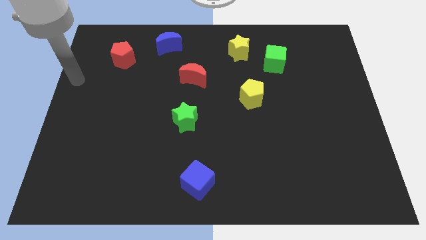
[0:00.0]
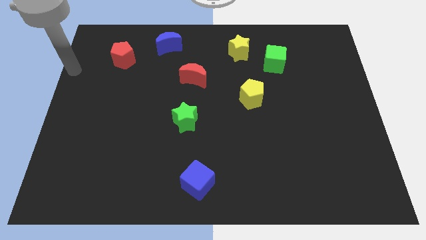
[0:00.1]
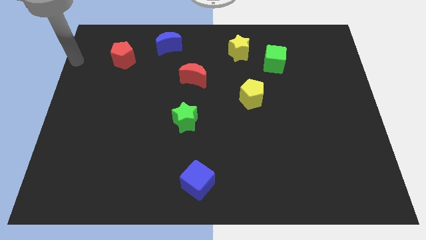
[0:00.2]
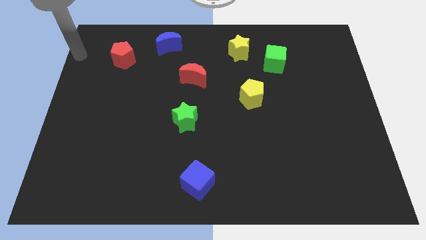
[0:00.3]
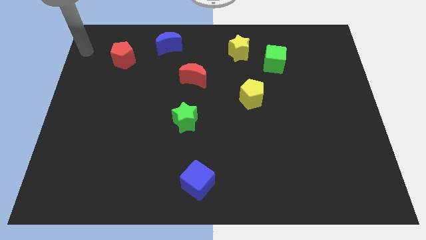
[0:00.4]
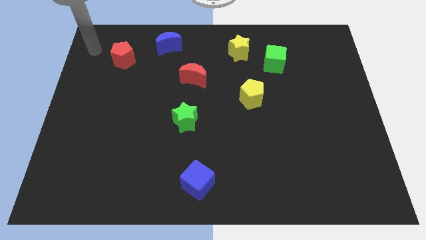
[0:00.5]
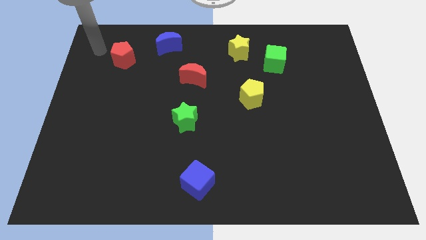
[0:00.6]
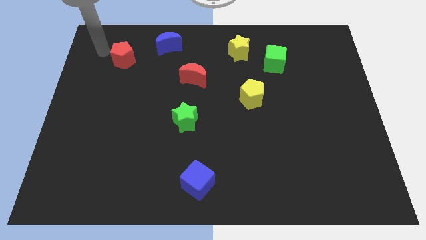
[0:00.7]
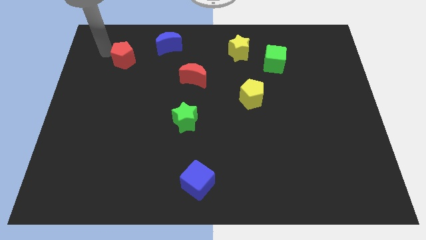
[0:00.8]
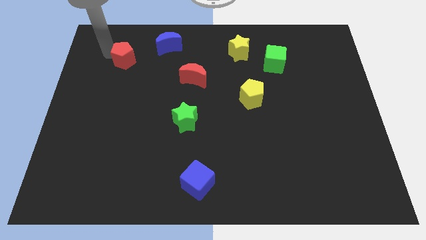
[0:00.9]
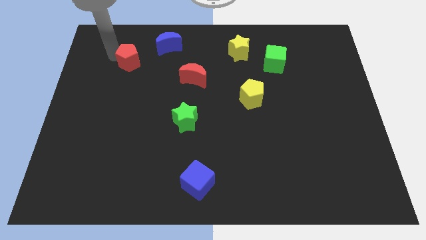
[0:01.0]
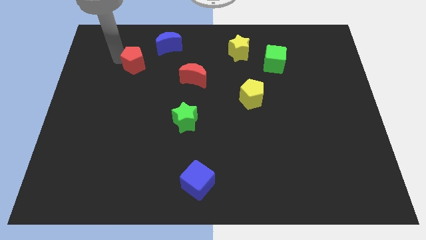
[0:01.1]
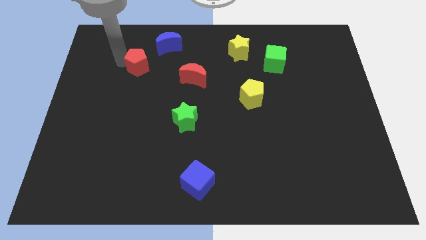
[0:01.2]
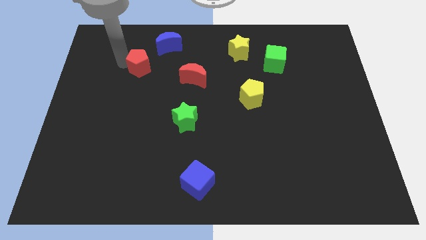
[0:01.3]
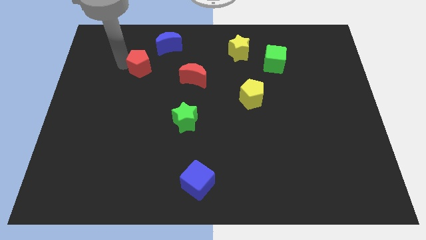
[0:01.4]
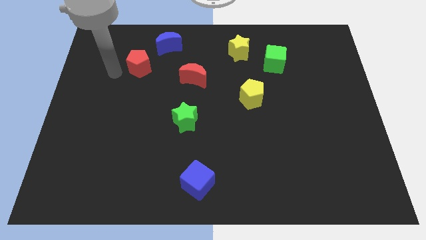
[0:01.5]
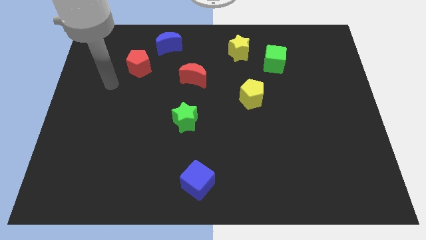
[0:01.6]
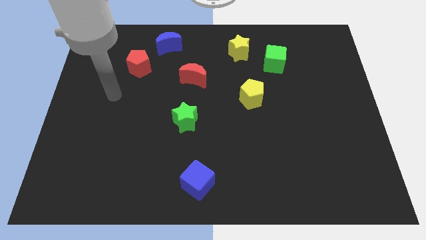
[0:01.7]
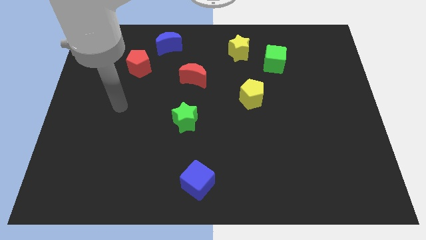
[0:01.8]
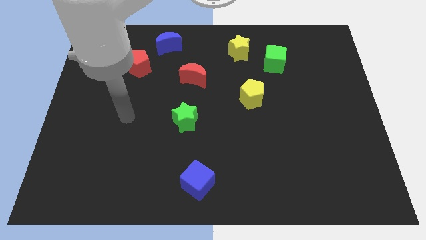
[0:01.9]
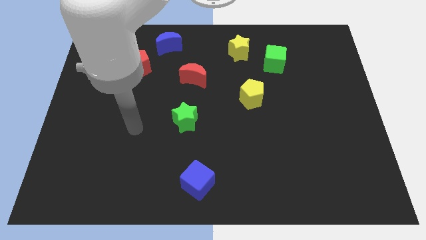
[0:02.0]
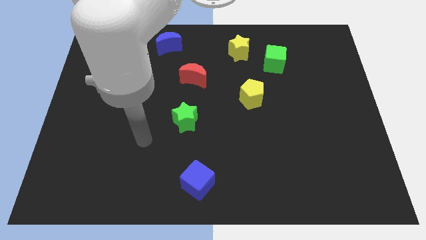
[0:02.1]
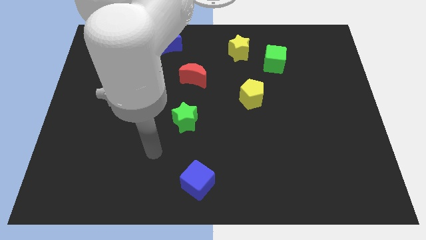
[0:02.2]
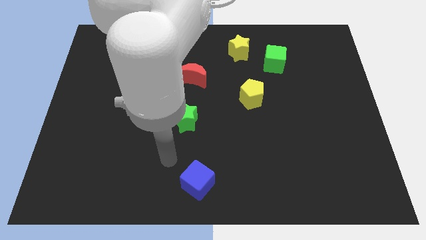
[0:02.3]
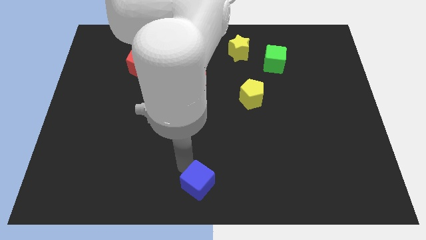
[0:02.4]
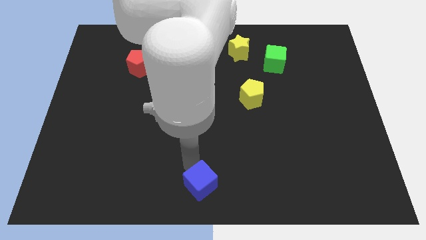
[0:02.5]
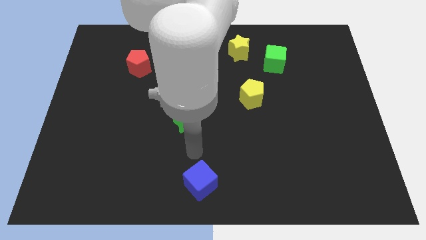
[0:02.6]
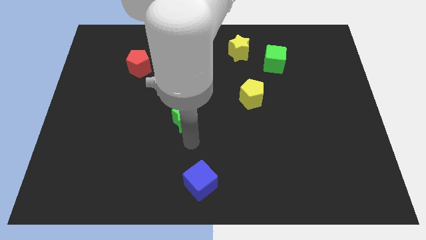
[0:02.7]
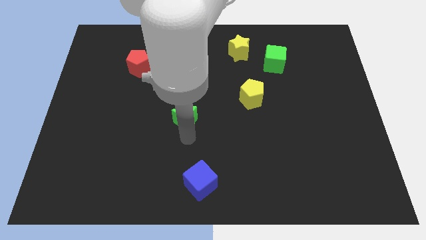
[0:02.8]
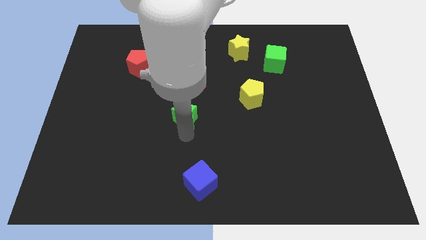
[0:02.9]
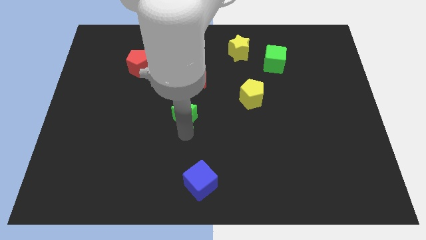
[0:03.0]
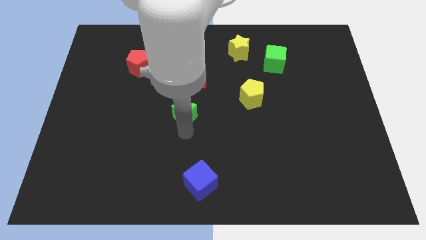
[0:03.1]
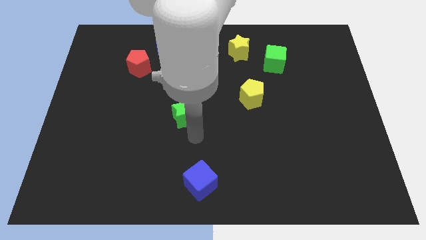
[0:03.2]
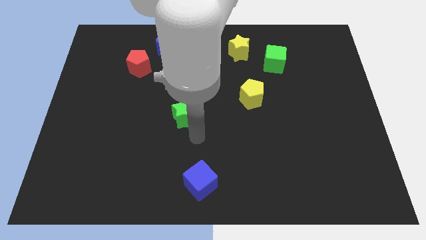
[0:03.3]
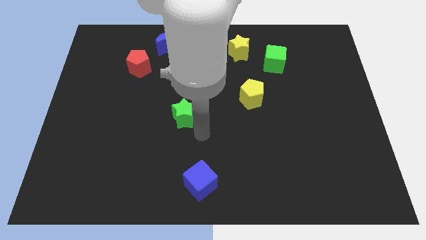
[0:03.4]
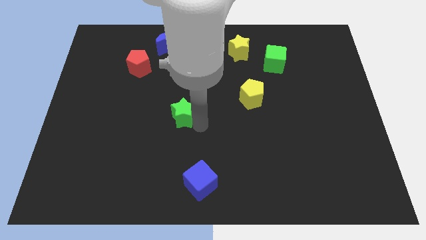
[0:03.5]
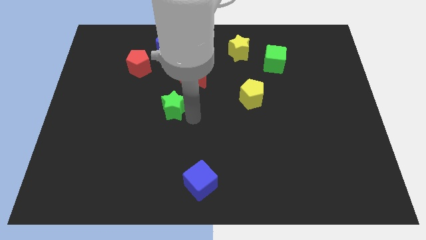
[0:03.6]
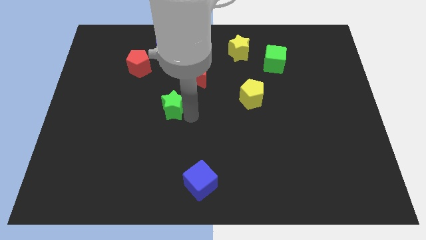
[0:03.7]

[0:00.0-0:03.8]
place your arm at the bottom right side of the green star

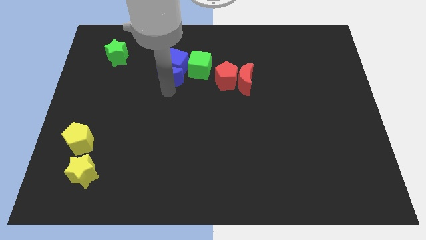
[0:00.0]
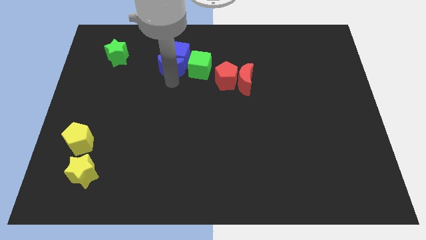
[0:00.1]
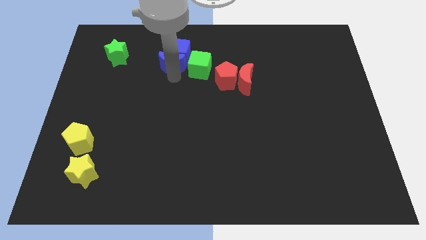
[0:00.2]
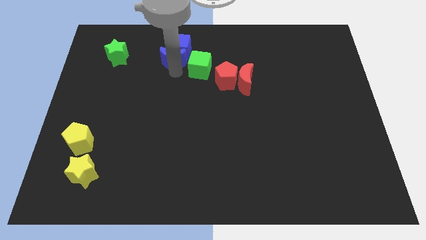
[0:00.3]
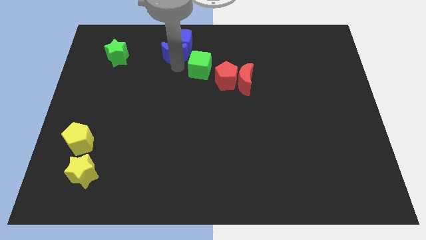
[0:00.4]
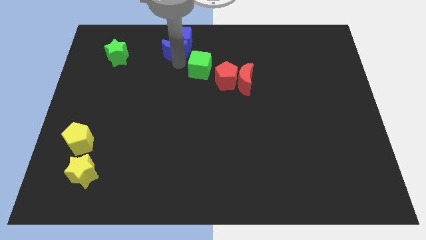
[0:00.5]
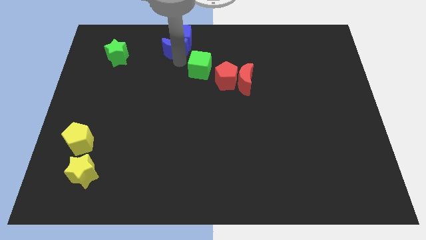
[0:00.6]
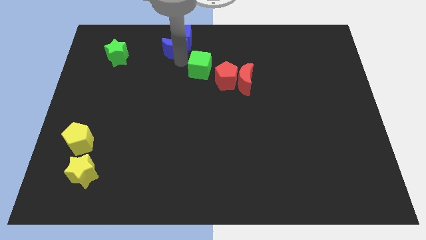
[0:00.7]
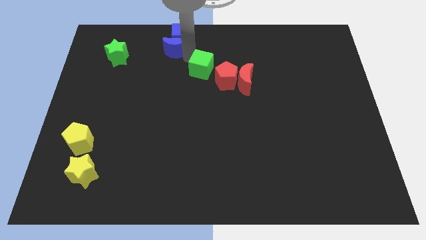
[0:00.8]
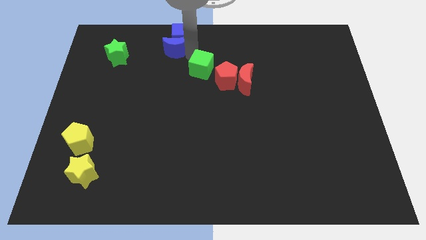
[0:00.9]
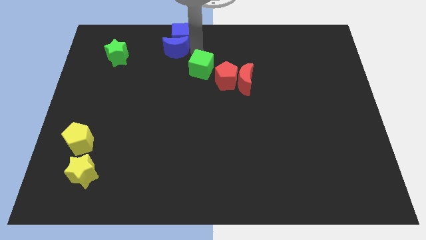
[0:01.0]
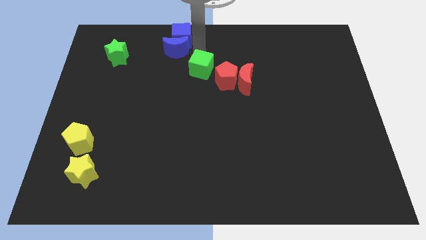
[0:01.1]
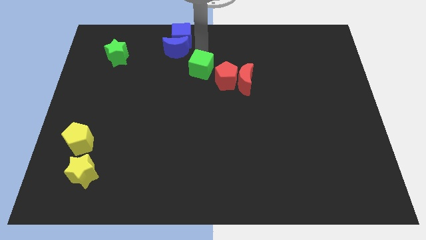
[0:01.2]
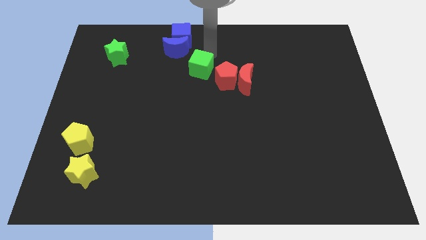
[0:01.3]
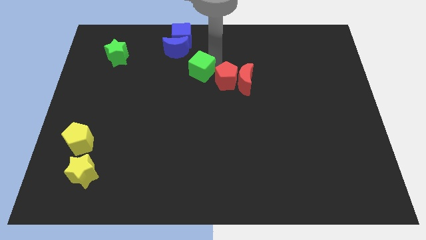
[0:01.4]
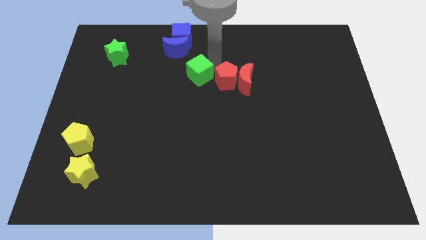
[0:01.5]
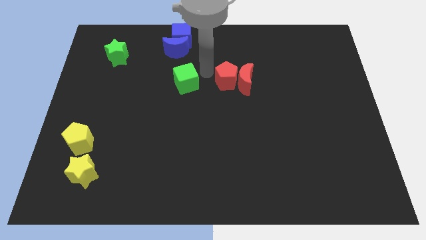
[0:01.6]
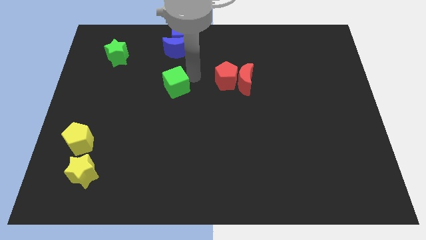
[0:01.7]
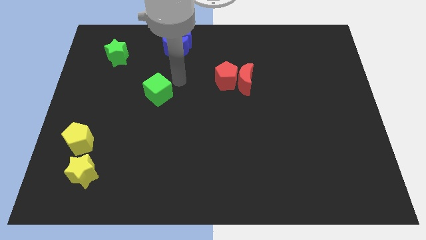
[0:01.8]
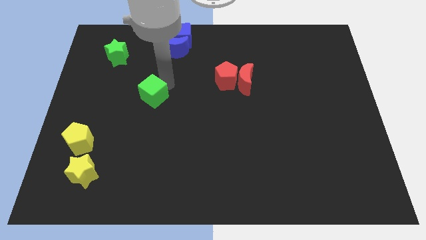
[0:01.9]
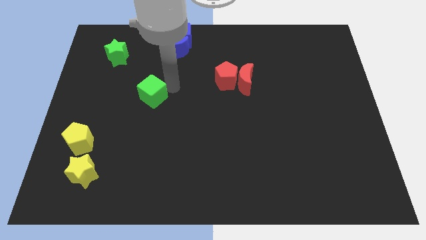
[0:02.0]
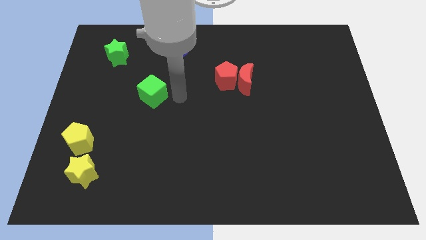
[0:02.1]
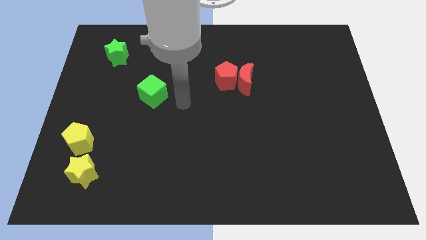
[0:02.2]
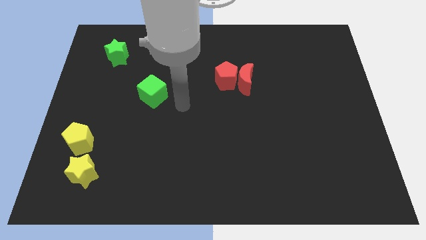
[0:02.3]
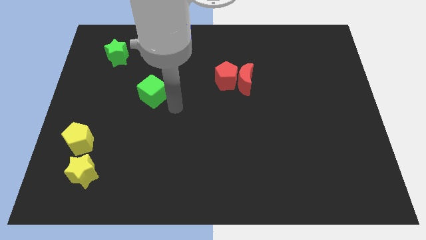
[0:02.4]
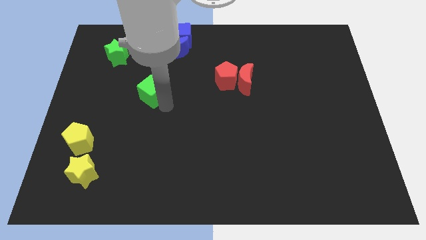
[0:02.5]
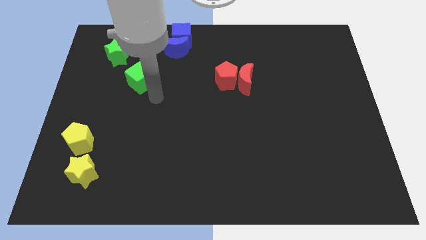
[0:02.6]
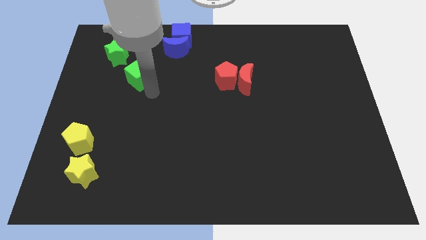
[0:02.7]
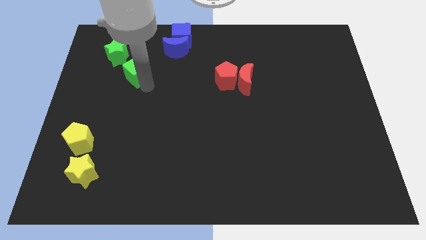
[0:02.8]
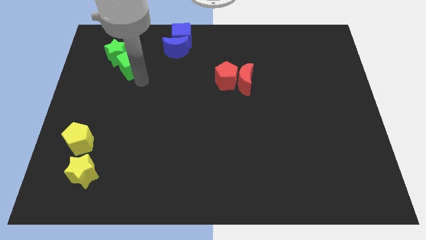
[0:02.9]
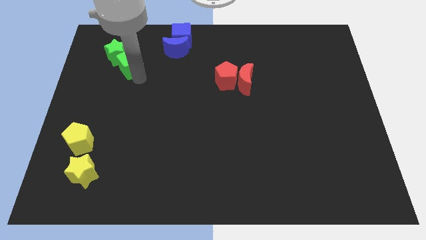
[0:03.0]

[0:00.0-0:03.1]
move the green cube to the green star

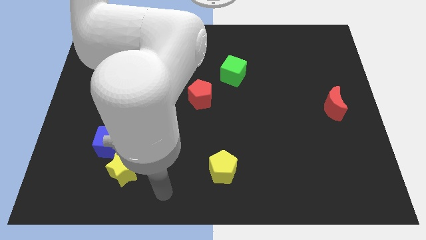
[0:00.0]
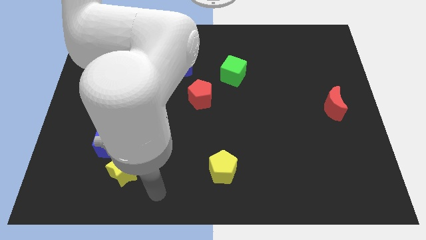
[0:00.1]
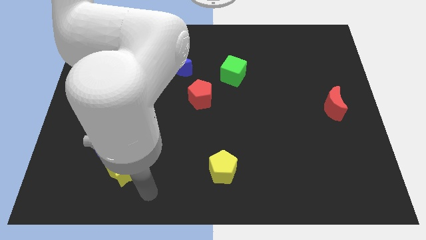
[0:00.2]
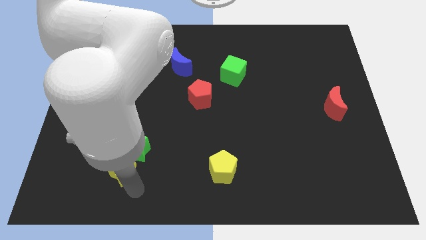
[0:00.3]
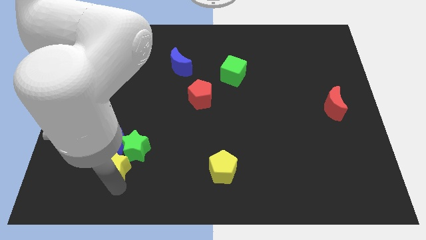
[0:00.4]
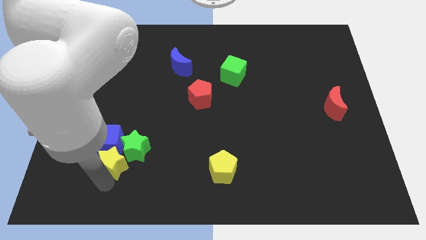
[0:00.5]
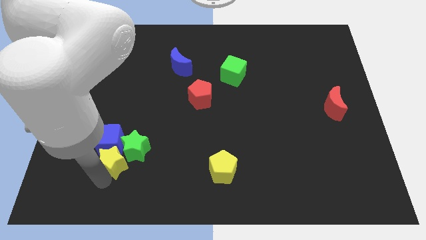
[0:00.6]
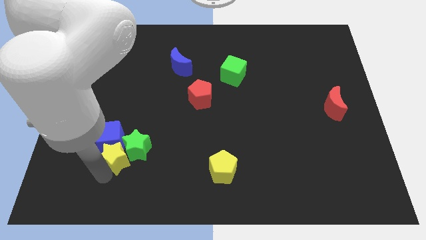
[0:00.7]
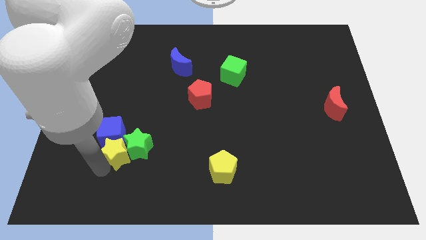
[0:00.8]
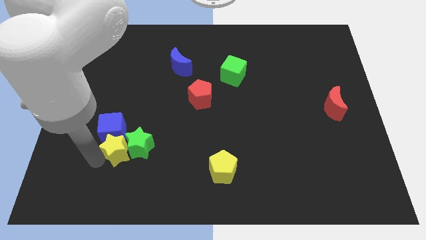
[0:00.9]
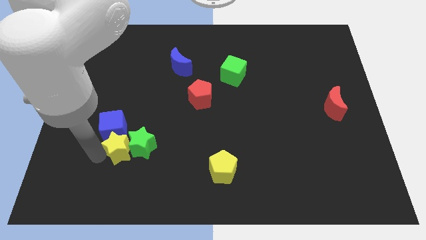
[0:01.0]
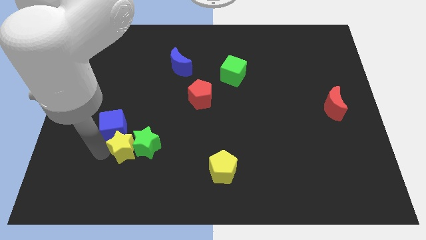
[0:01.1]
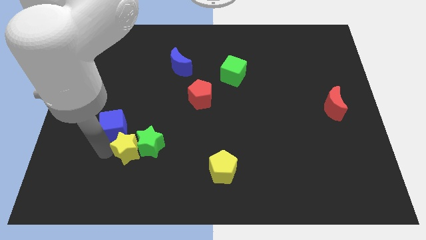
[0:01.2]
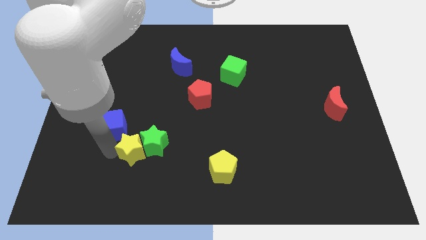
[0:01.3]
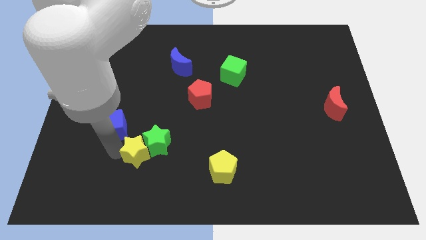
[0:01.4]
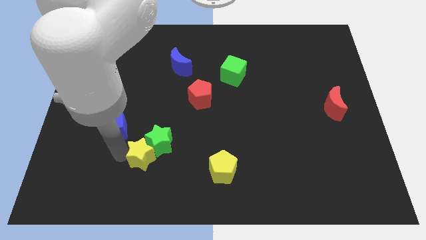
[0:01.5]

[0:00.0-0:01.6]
push the yellow star into the green star

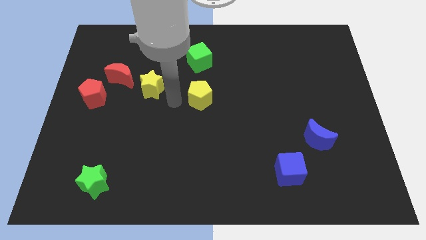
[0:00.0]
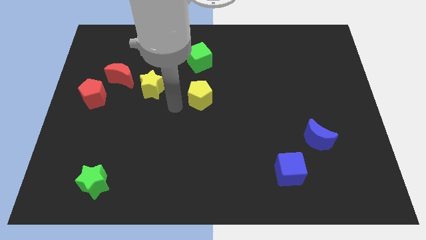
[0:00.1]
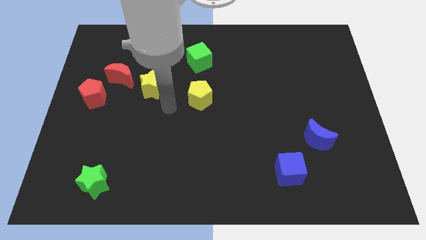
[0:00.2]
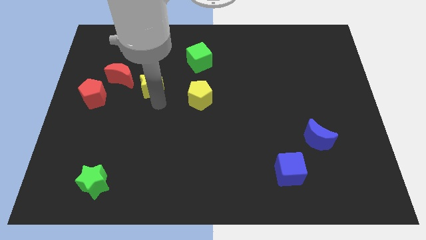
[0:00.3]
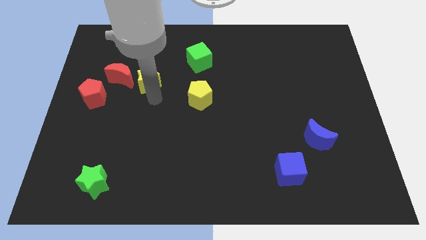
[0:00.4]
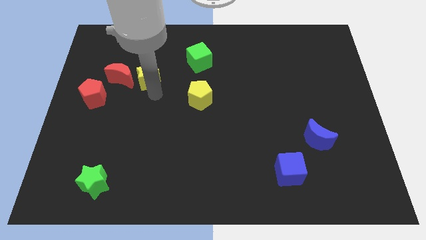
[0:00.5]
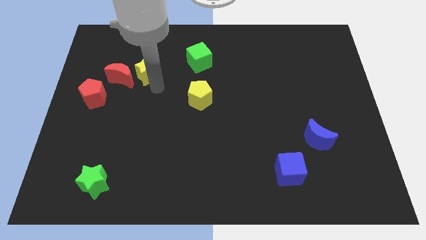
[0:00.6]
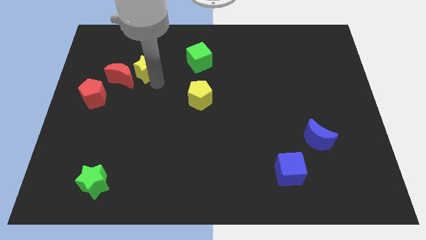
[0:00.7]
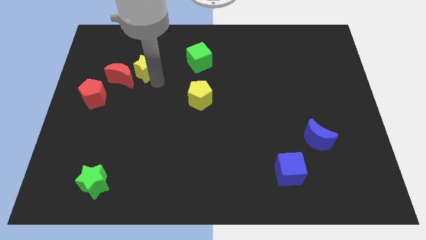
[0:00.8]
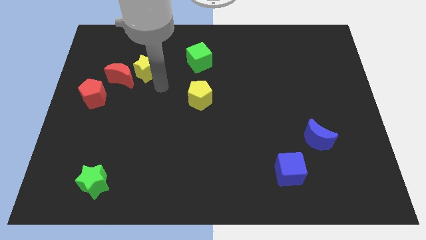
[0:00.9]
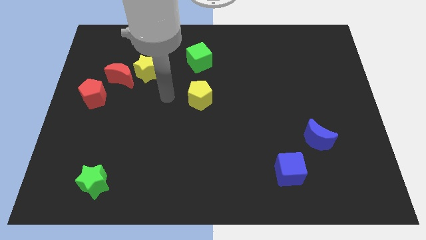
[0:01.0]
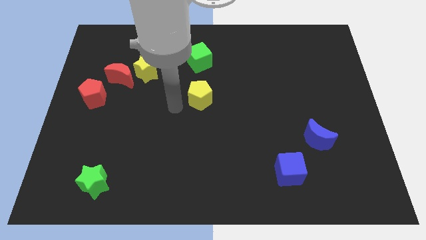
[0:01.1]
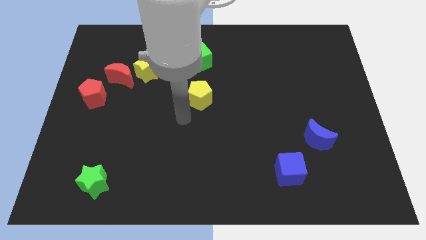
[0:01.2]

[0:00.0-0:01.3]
put the yellow star between the green cube and red moon
